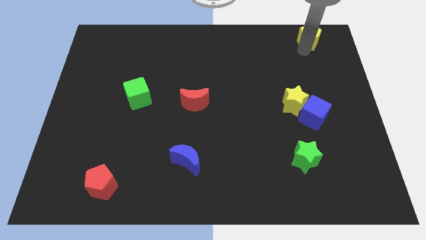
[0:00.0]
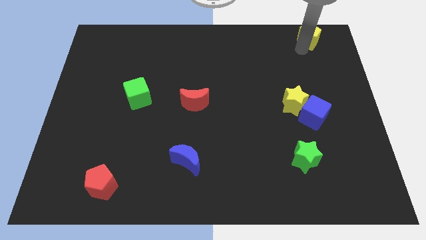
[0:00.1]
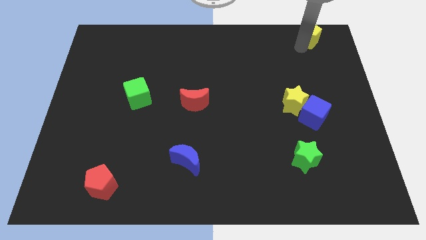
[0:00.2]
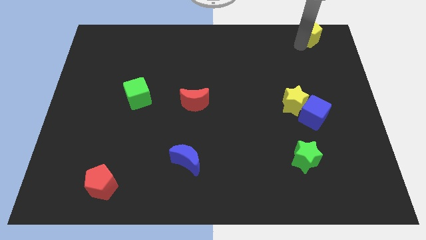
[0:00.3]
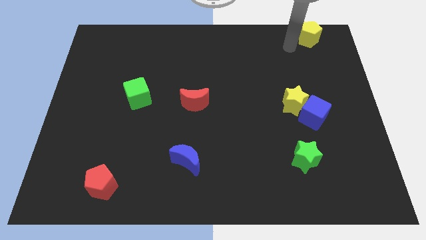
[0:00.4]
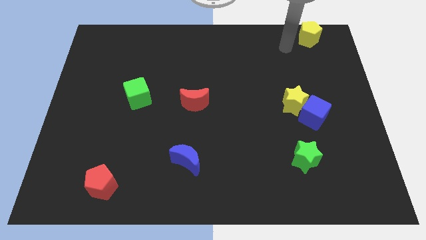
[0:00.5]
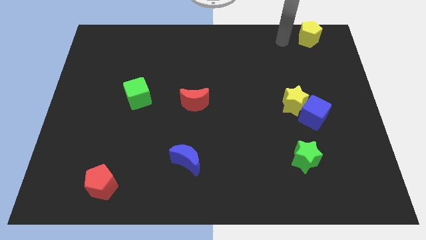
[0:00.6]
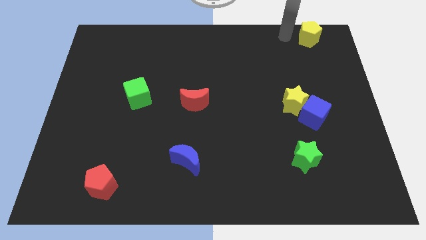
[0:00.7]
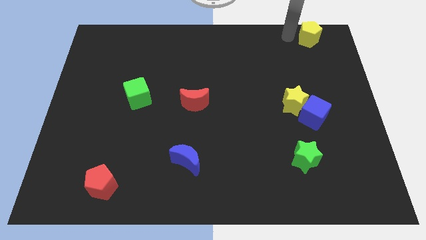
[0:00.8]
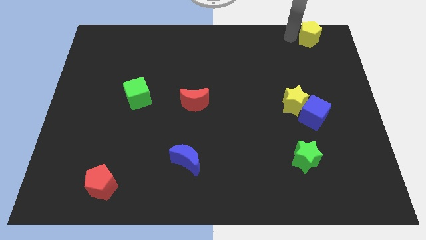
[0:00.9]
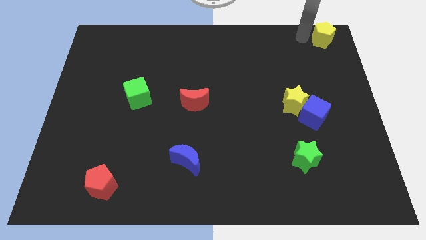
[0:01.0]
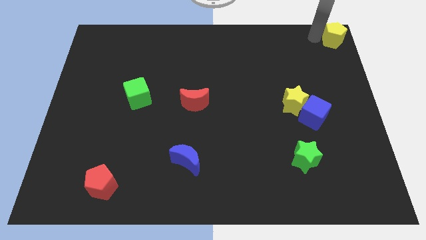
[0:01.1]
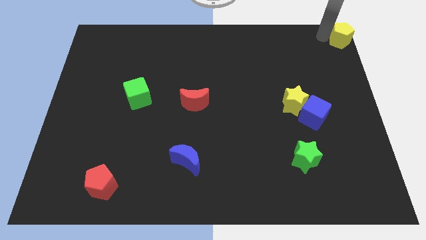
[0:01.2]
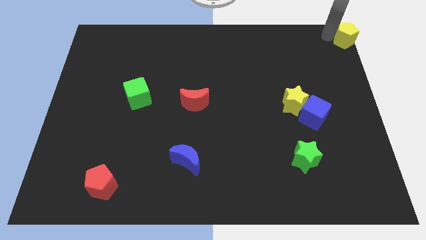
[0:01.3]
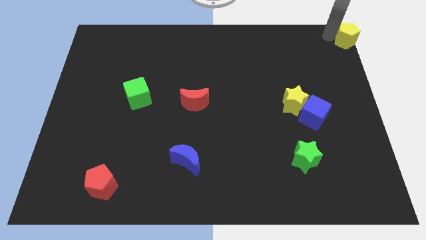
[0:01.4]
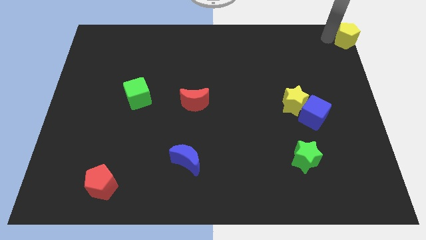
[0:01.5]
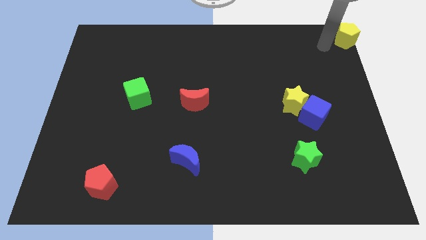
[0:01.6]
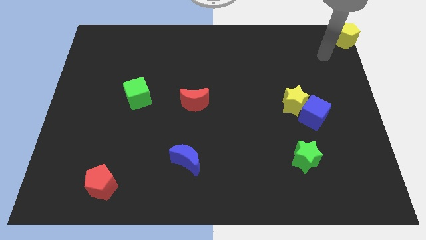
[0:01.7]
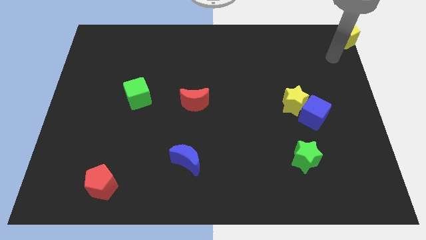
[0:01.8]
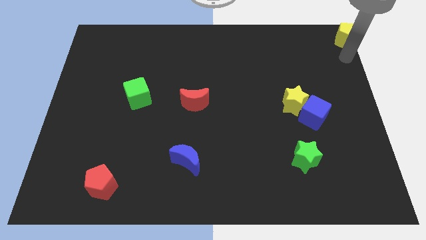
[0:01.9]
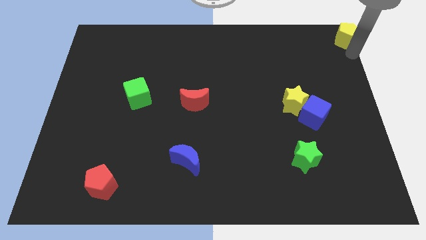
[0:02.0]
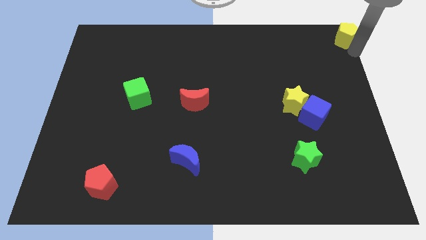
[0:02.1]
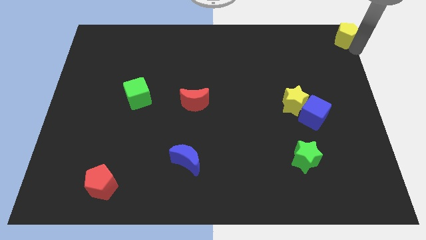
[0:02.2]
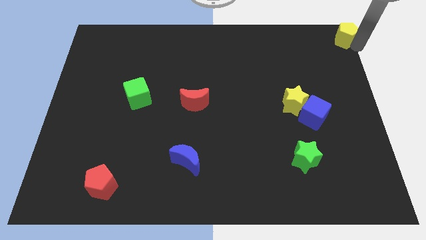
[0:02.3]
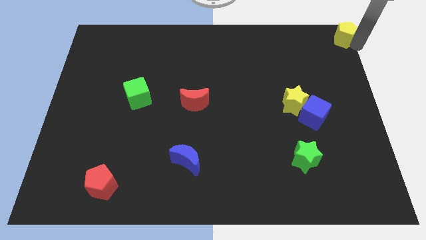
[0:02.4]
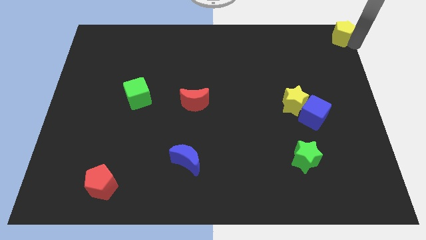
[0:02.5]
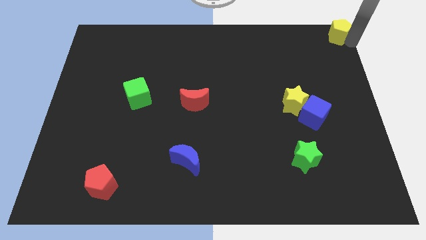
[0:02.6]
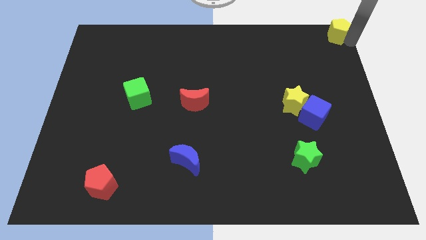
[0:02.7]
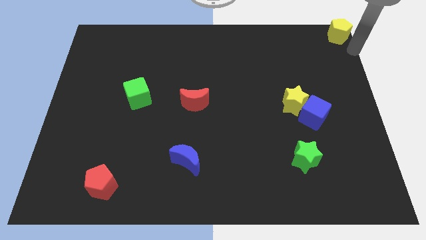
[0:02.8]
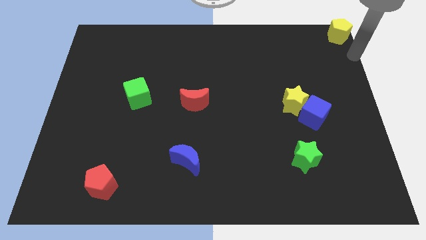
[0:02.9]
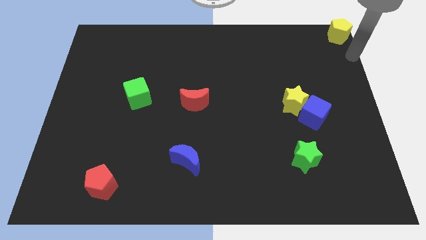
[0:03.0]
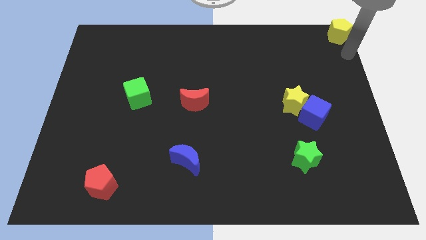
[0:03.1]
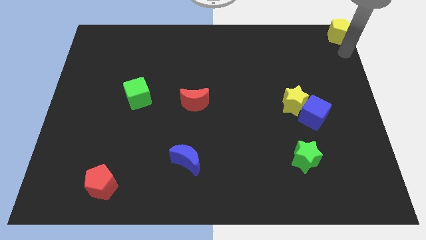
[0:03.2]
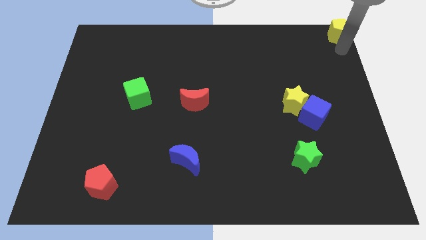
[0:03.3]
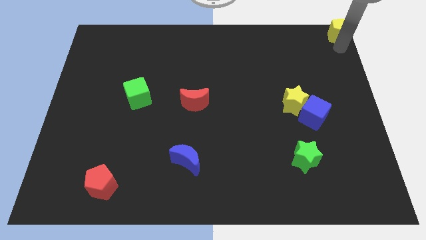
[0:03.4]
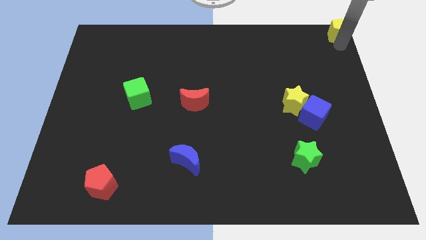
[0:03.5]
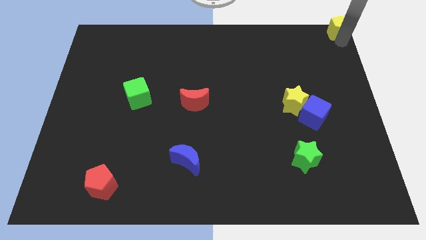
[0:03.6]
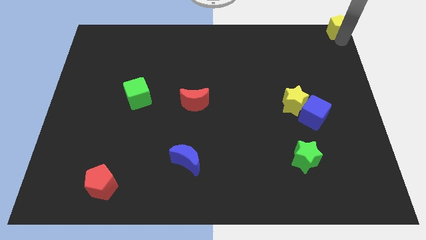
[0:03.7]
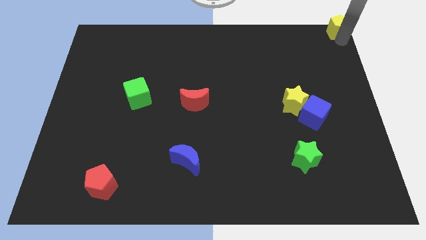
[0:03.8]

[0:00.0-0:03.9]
push the yellow pentagon to the top right corner of the board

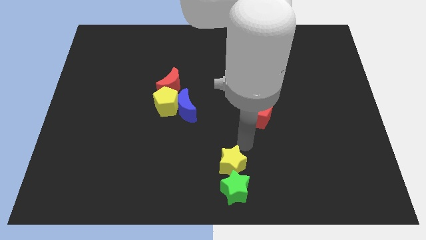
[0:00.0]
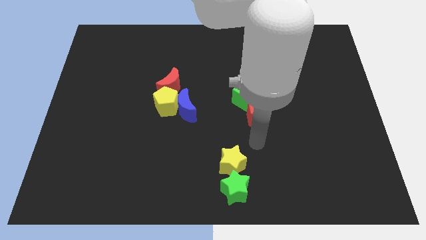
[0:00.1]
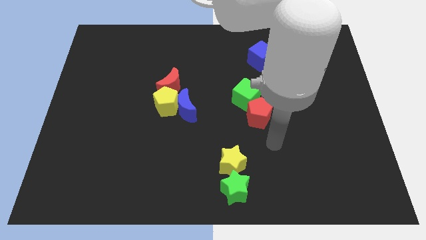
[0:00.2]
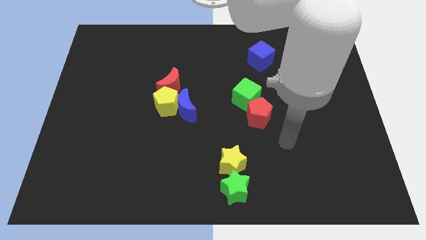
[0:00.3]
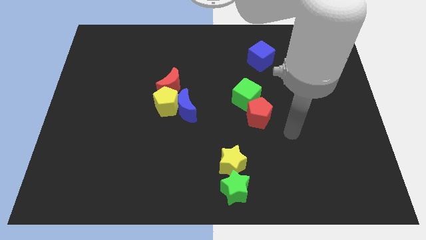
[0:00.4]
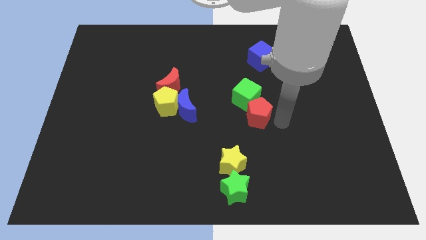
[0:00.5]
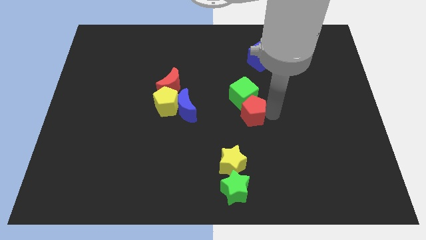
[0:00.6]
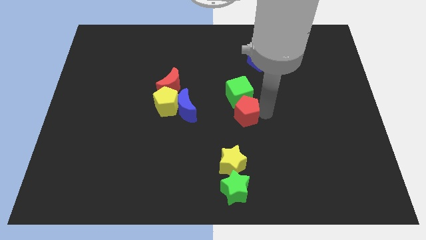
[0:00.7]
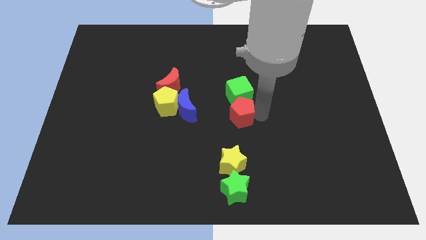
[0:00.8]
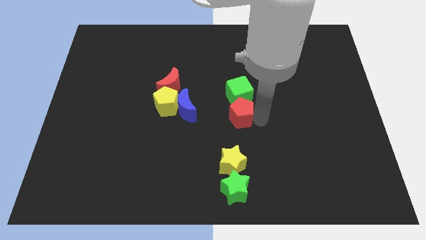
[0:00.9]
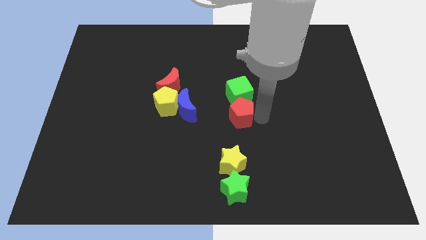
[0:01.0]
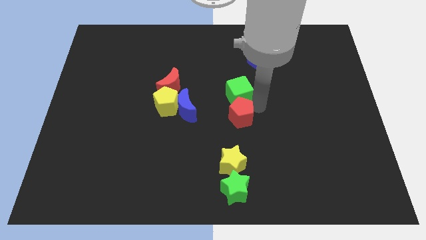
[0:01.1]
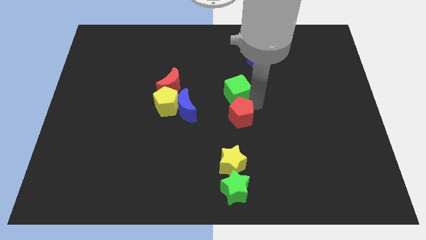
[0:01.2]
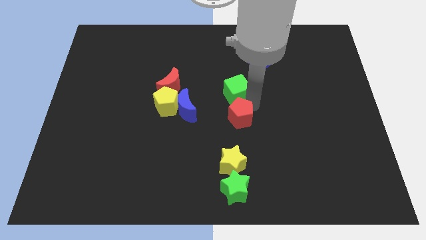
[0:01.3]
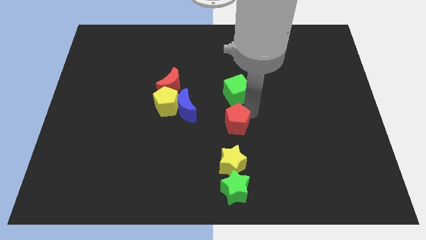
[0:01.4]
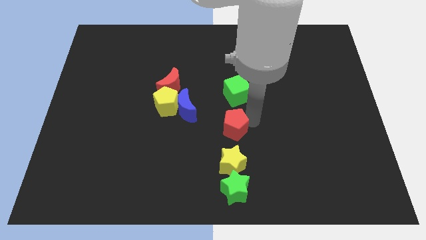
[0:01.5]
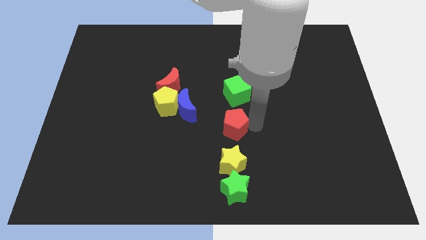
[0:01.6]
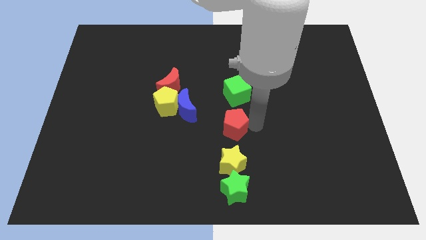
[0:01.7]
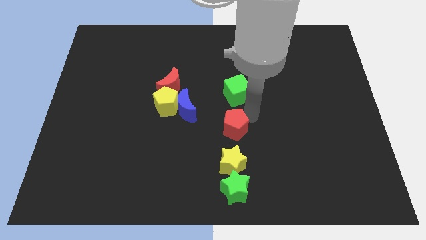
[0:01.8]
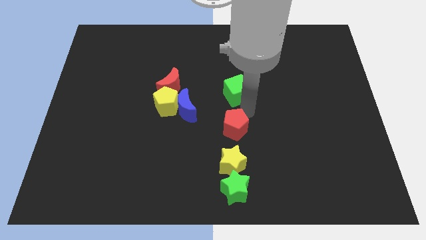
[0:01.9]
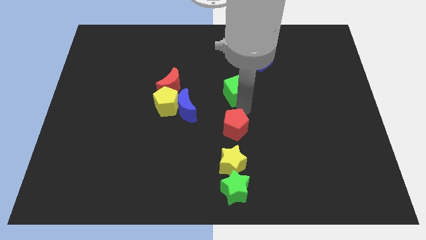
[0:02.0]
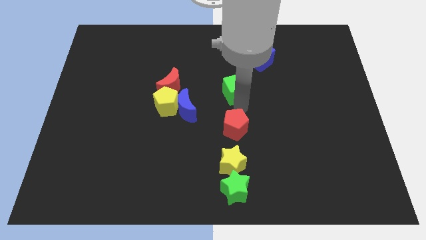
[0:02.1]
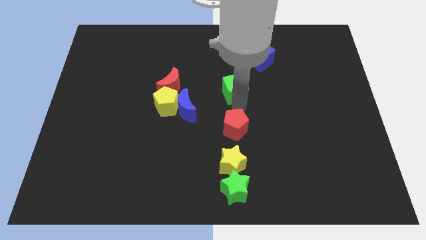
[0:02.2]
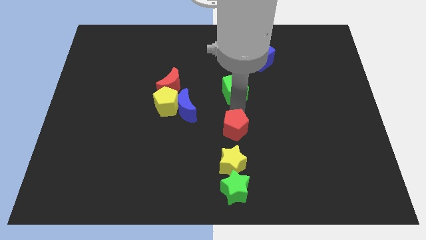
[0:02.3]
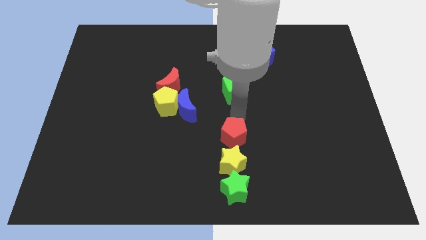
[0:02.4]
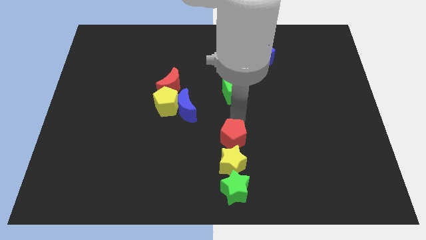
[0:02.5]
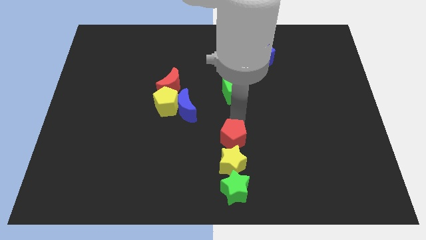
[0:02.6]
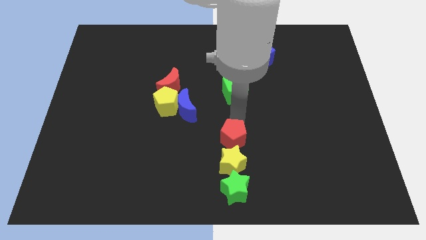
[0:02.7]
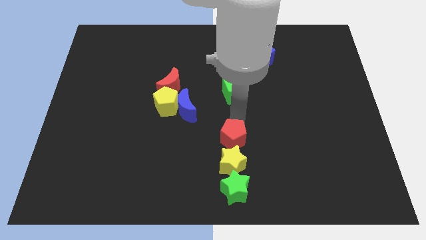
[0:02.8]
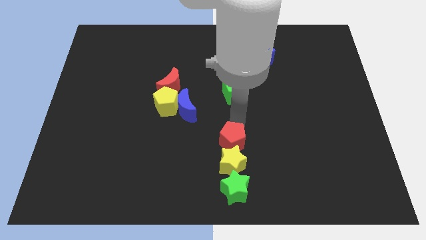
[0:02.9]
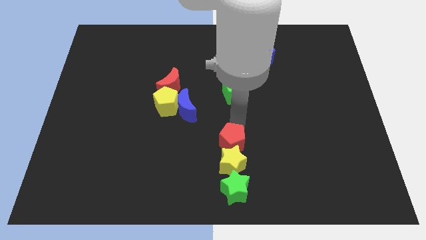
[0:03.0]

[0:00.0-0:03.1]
push the red pentagon on the top of the yellow star

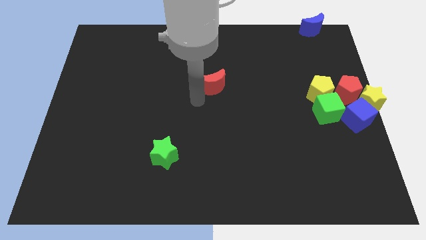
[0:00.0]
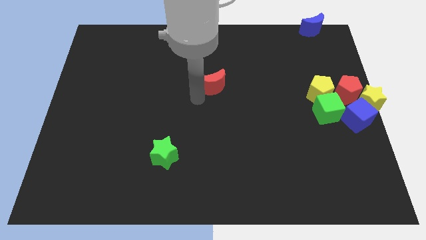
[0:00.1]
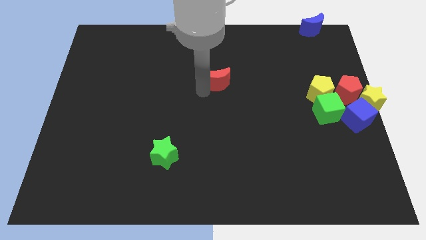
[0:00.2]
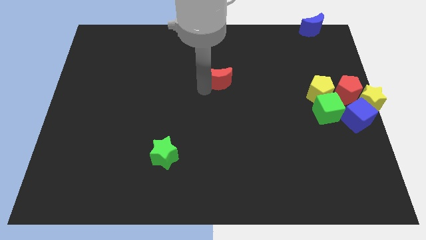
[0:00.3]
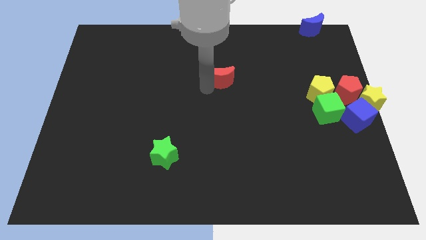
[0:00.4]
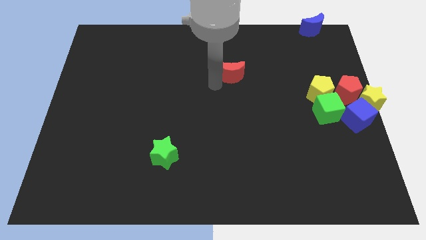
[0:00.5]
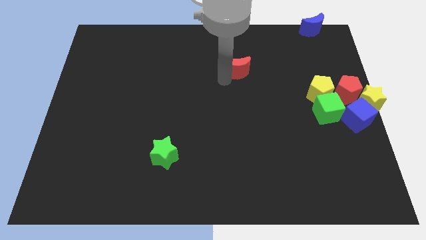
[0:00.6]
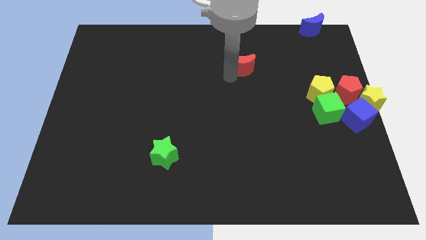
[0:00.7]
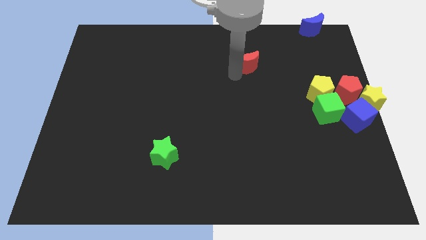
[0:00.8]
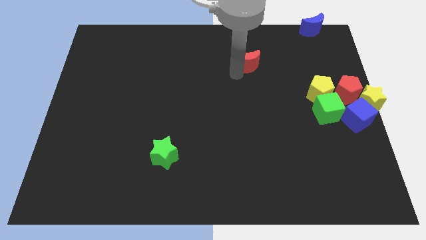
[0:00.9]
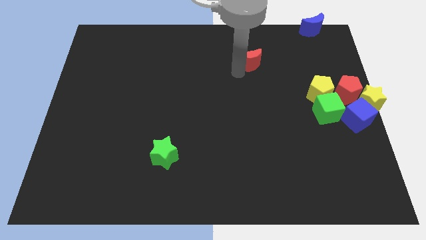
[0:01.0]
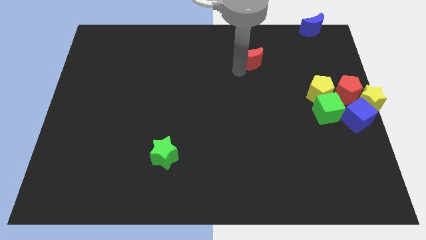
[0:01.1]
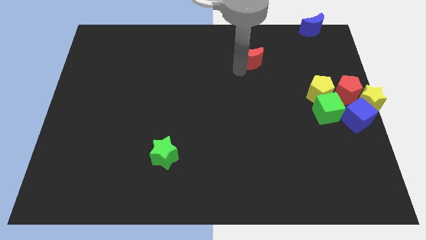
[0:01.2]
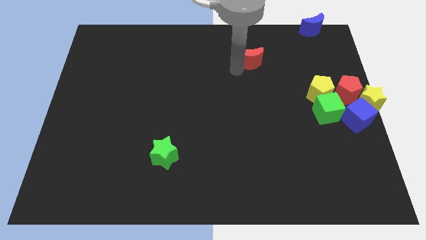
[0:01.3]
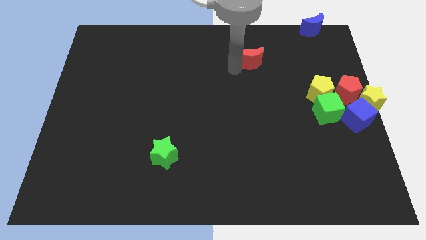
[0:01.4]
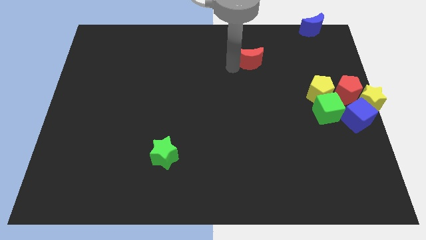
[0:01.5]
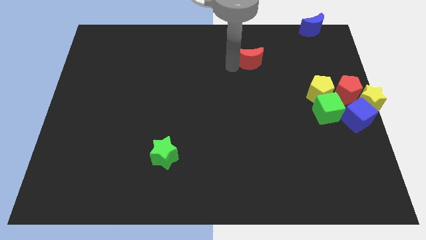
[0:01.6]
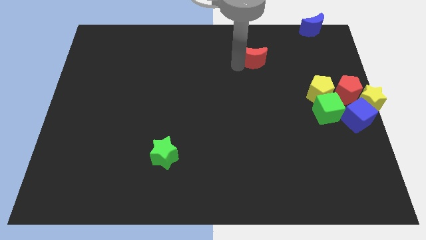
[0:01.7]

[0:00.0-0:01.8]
move the red moon towards the blue moon
